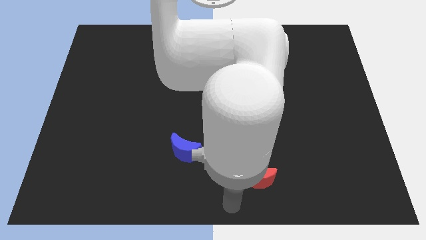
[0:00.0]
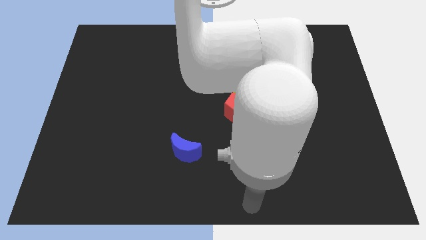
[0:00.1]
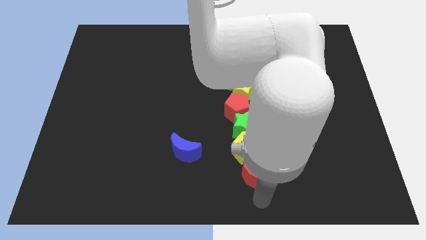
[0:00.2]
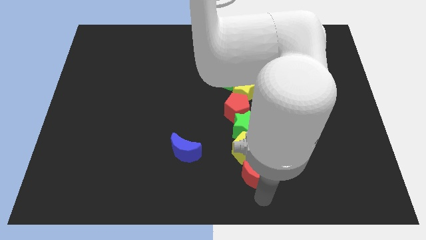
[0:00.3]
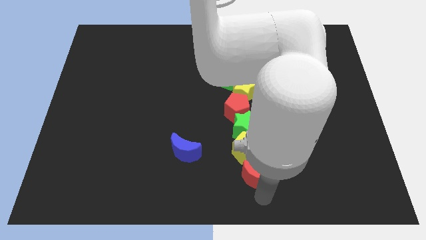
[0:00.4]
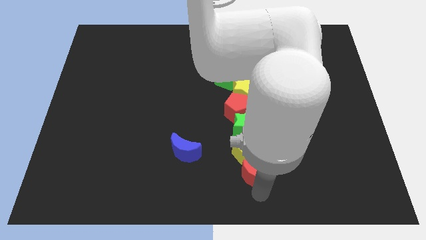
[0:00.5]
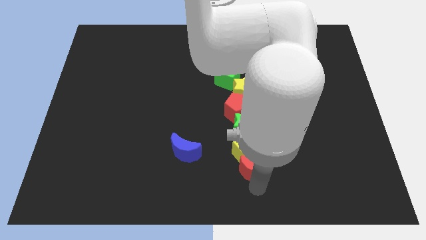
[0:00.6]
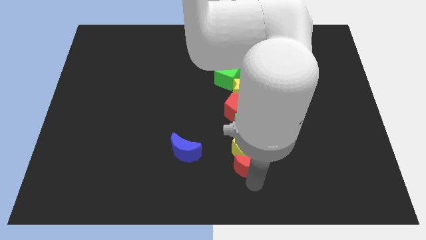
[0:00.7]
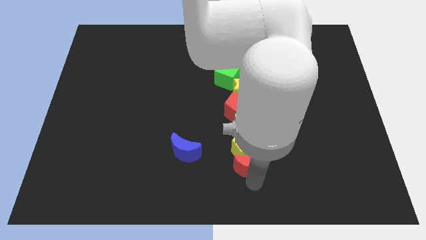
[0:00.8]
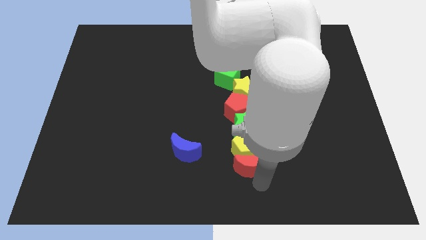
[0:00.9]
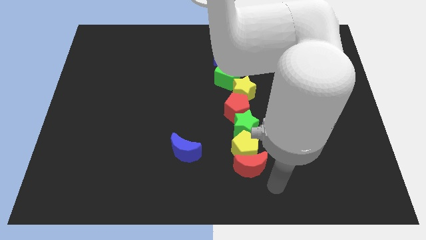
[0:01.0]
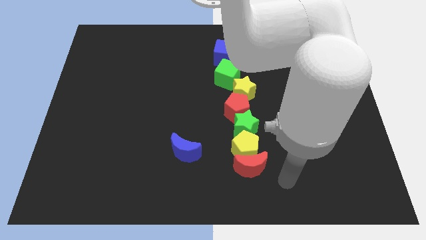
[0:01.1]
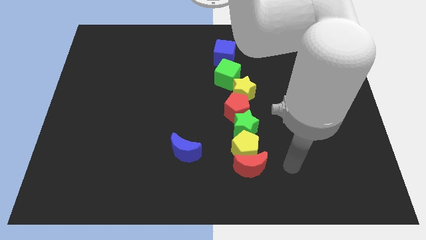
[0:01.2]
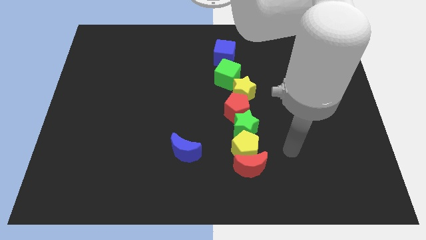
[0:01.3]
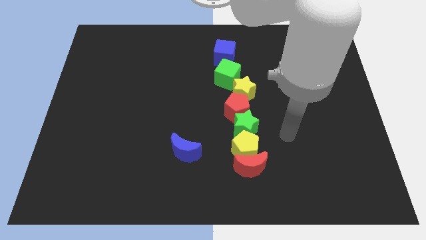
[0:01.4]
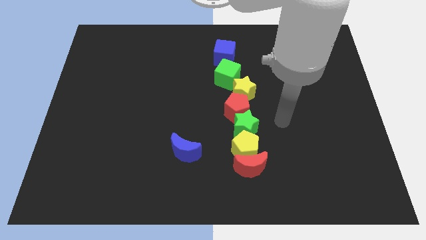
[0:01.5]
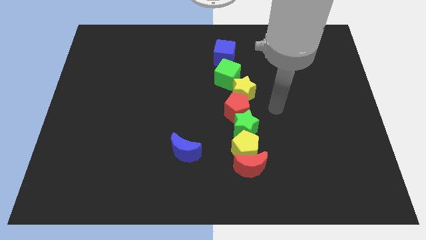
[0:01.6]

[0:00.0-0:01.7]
put the red moon to the bottom side of the yellow pentagon

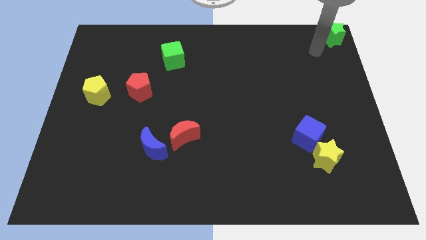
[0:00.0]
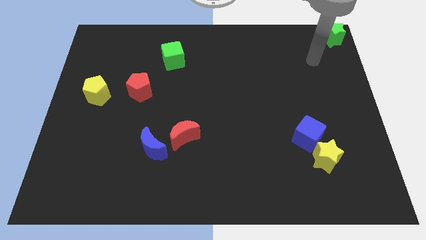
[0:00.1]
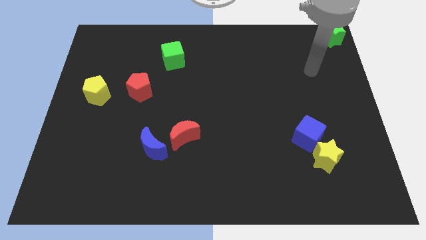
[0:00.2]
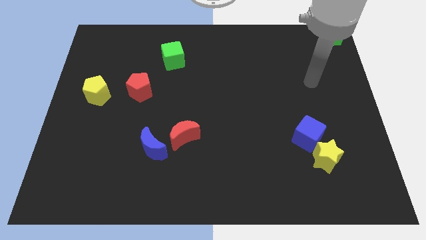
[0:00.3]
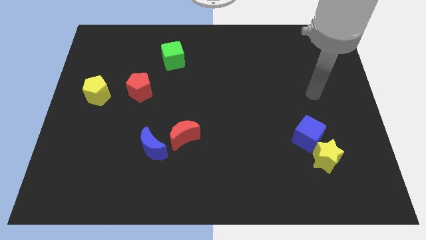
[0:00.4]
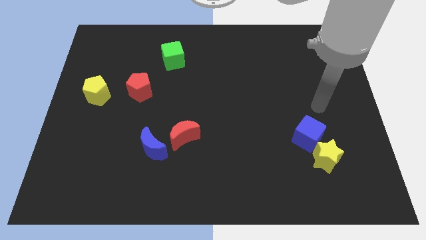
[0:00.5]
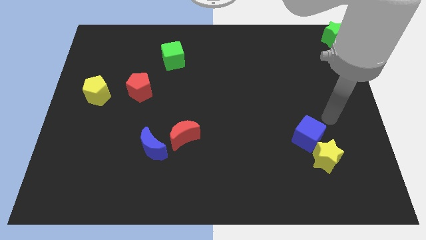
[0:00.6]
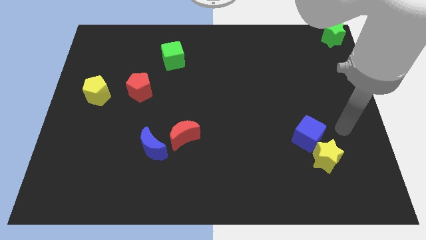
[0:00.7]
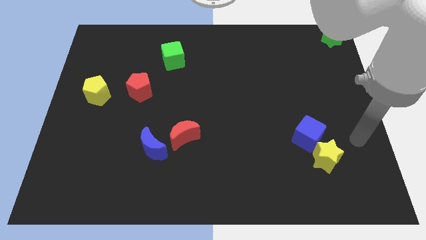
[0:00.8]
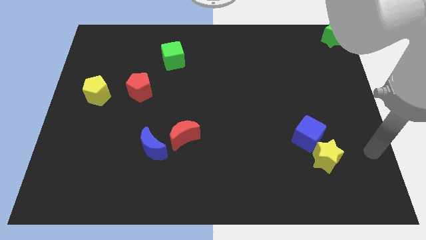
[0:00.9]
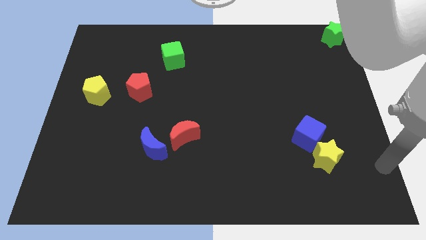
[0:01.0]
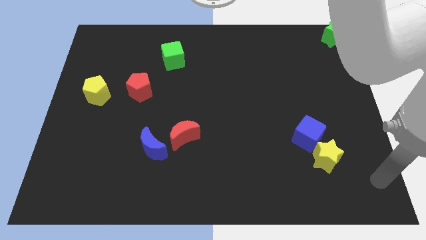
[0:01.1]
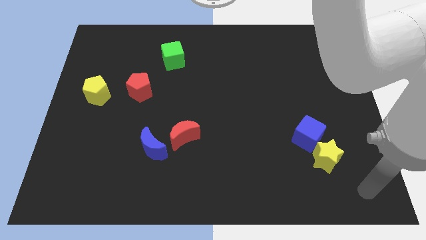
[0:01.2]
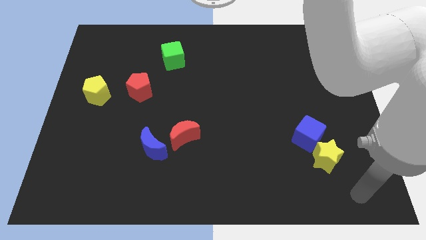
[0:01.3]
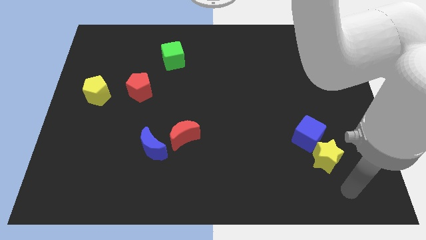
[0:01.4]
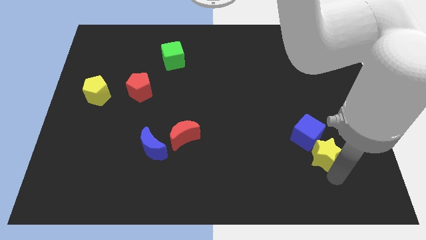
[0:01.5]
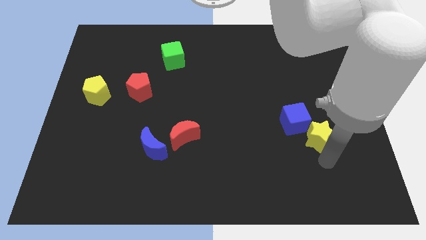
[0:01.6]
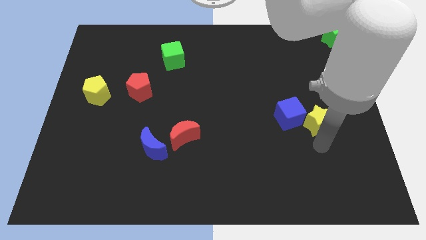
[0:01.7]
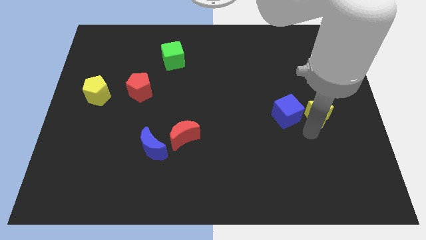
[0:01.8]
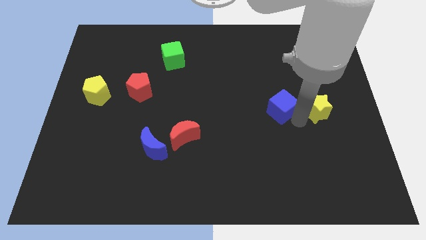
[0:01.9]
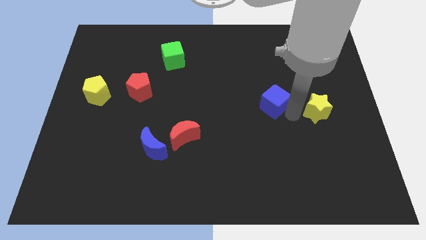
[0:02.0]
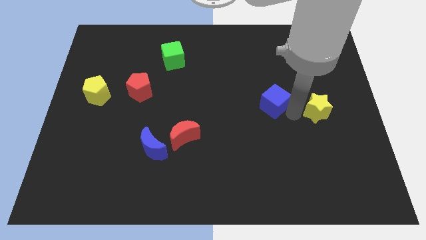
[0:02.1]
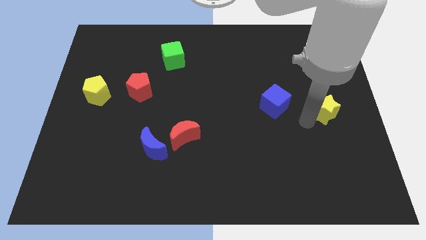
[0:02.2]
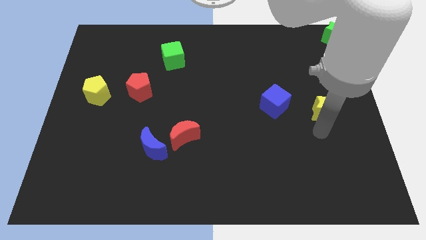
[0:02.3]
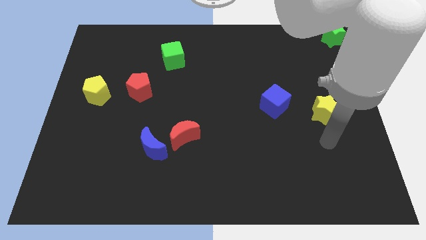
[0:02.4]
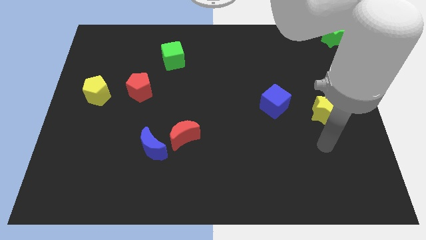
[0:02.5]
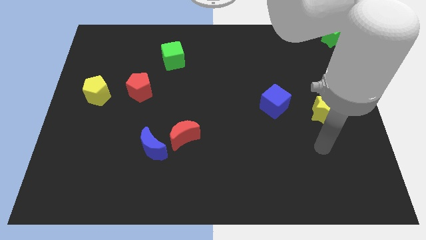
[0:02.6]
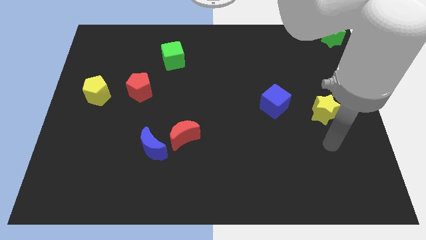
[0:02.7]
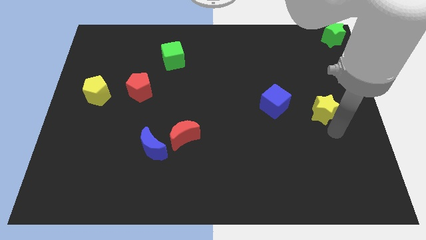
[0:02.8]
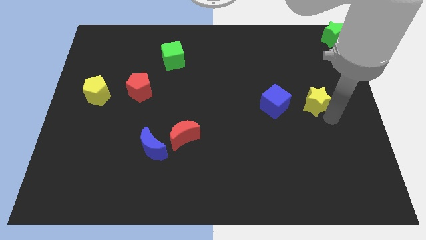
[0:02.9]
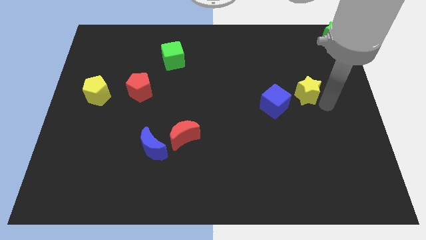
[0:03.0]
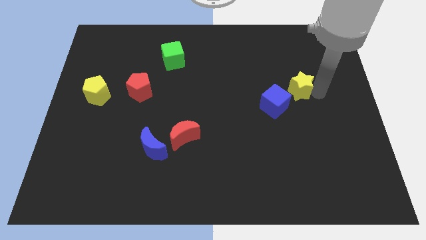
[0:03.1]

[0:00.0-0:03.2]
separate blue cube and the yellow star

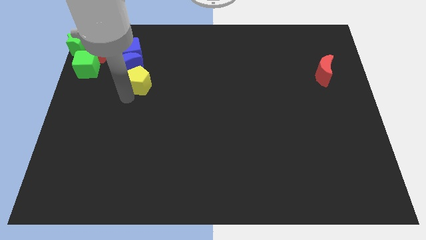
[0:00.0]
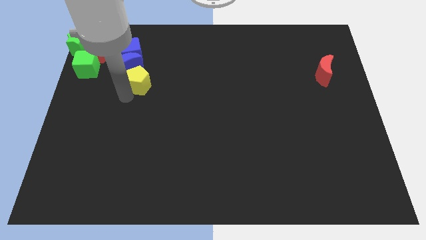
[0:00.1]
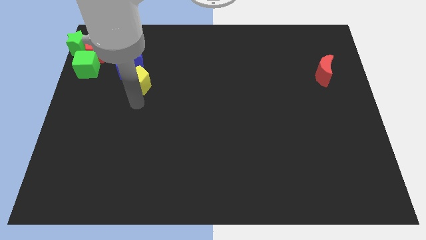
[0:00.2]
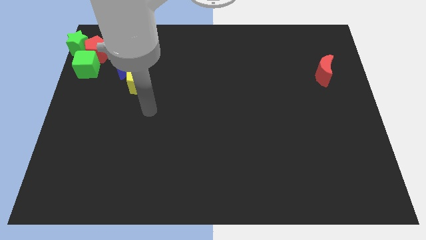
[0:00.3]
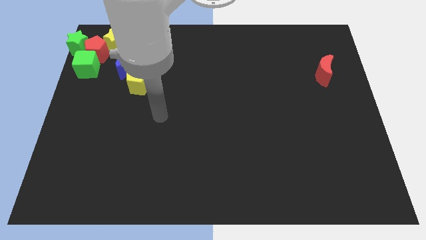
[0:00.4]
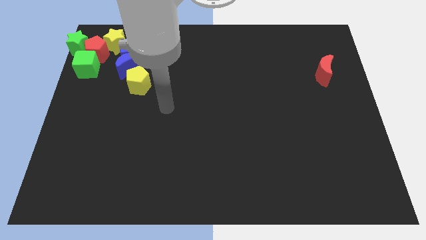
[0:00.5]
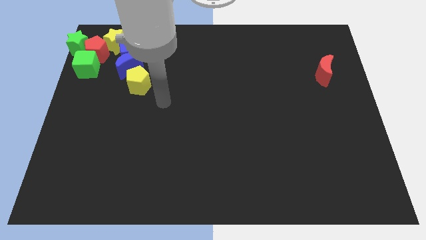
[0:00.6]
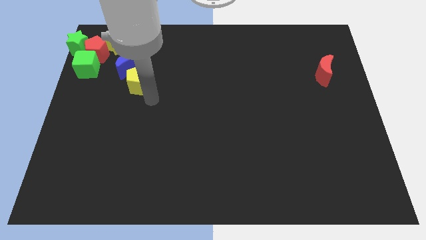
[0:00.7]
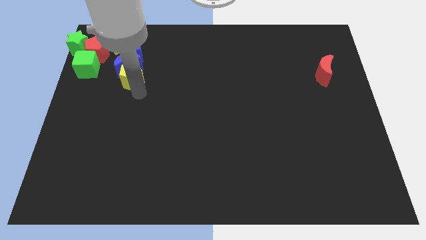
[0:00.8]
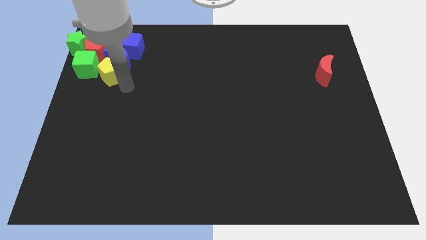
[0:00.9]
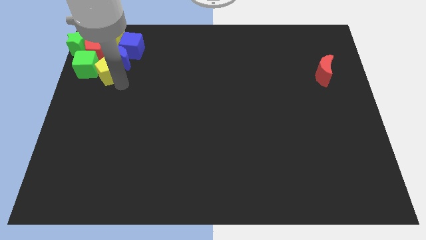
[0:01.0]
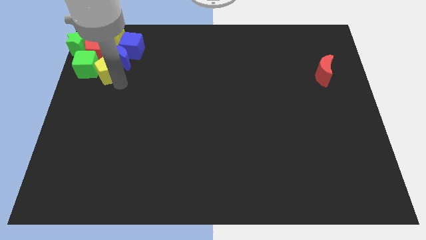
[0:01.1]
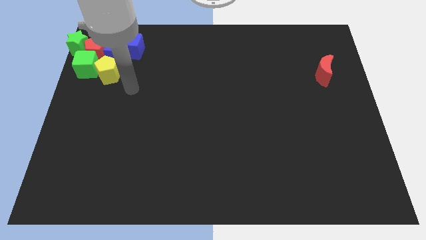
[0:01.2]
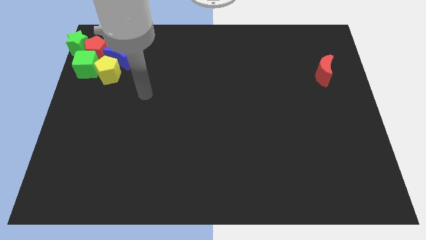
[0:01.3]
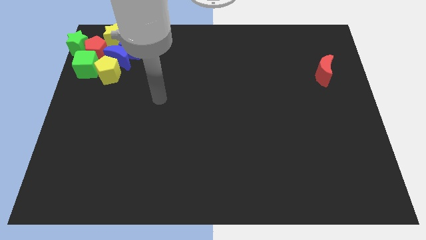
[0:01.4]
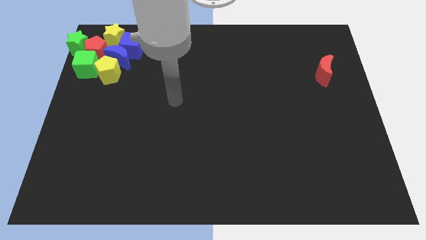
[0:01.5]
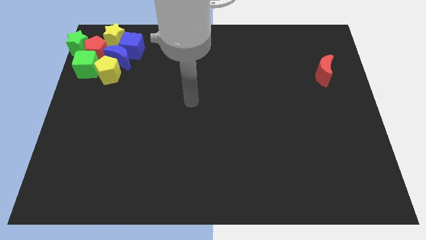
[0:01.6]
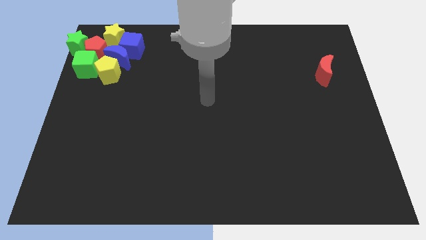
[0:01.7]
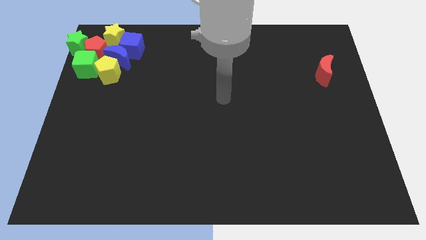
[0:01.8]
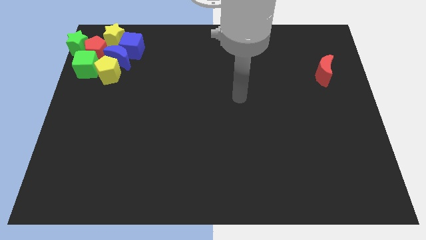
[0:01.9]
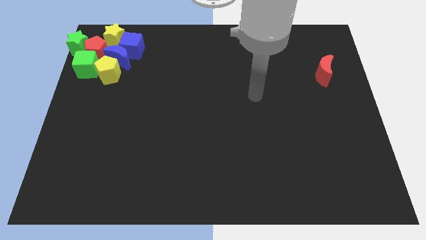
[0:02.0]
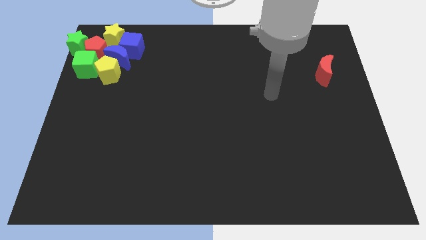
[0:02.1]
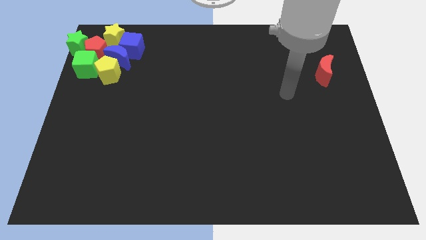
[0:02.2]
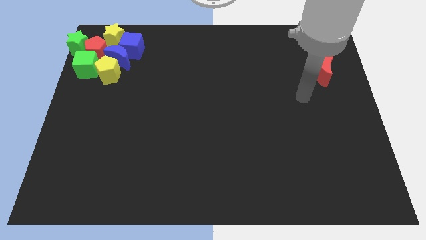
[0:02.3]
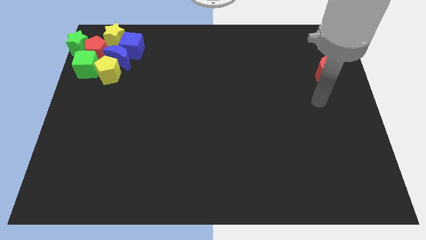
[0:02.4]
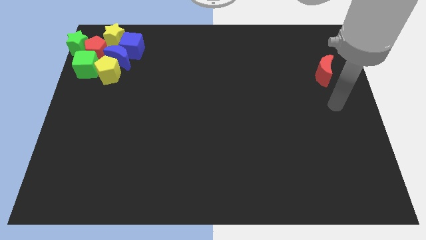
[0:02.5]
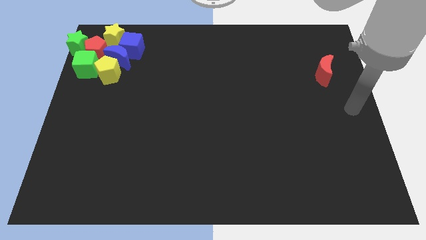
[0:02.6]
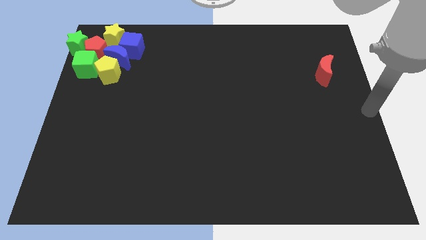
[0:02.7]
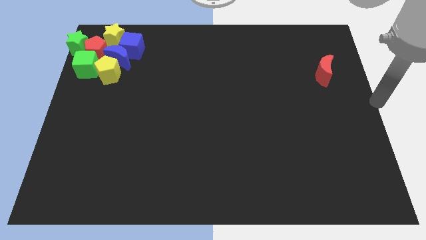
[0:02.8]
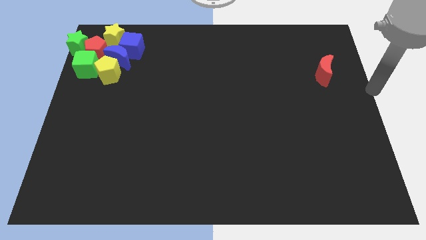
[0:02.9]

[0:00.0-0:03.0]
move your arm towards the red crescent

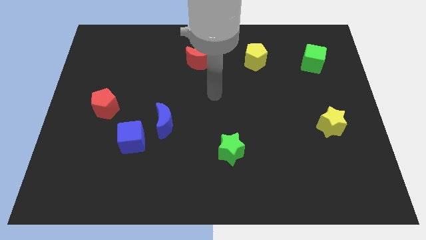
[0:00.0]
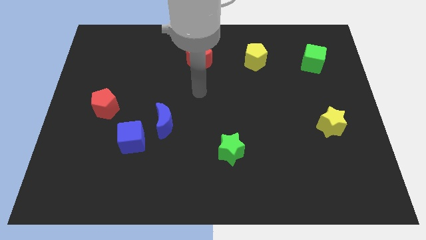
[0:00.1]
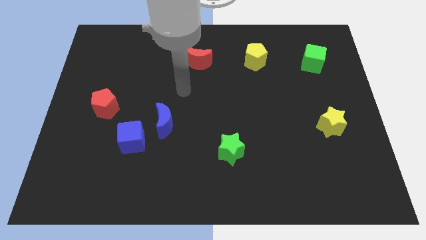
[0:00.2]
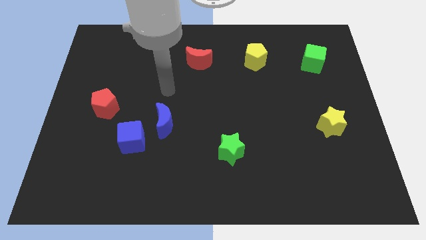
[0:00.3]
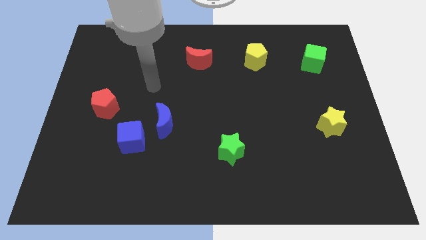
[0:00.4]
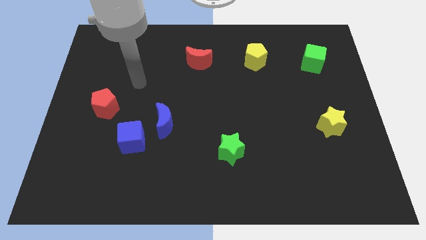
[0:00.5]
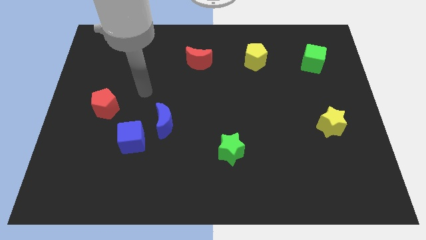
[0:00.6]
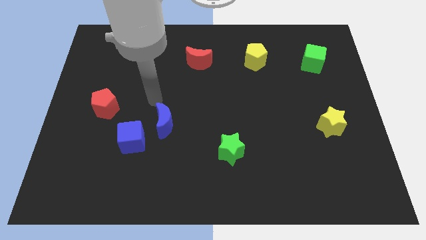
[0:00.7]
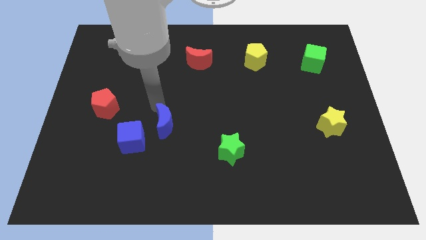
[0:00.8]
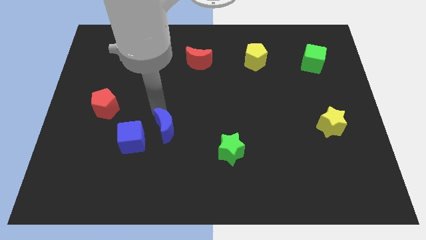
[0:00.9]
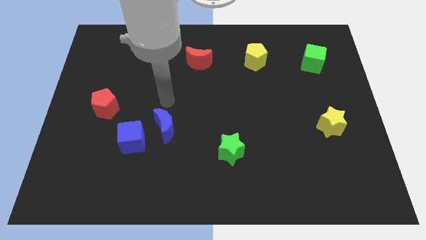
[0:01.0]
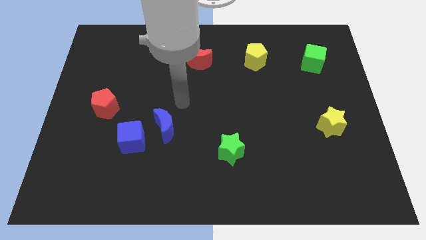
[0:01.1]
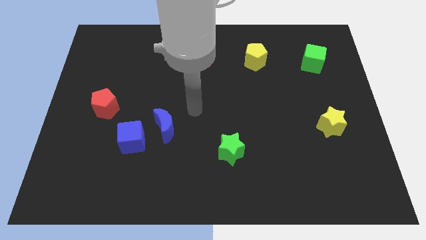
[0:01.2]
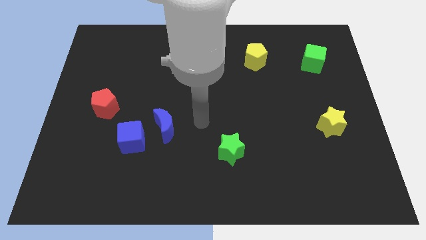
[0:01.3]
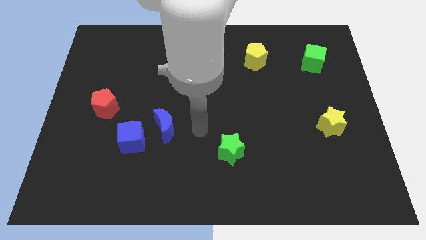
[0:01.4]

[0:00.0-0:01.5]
push the blue crescent slightly towards bottom
